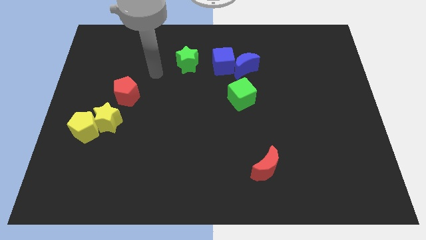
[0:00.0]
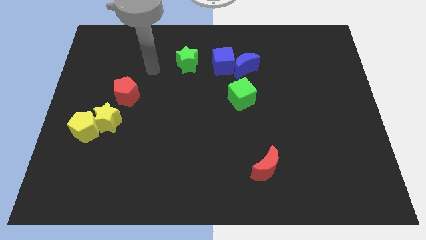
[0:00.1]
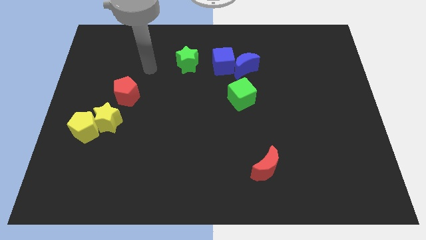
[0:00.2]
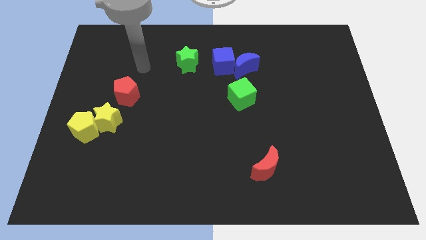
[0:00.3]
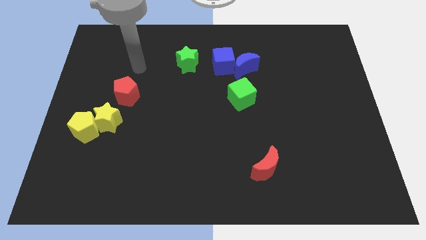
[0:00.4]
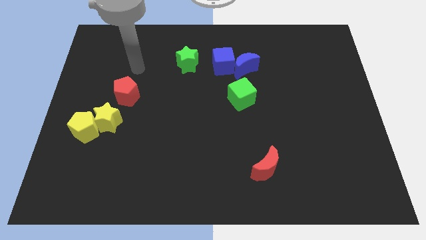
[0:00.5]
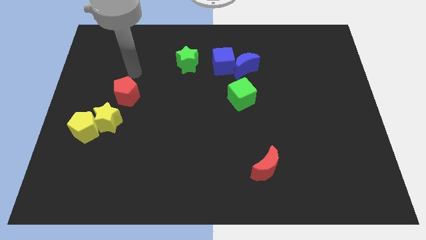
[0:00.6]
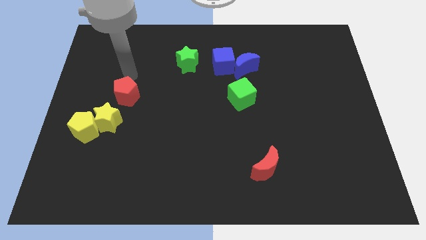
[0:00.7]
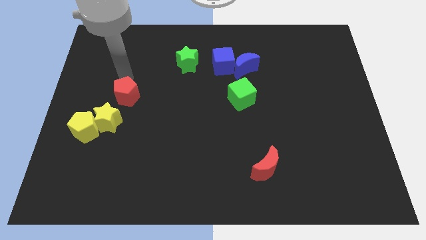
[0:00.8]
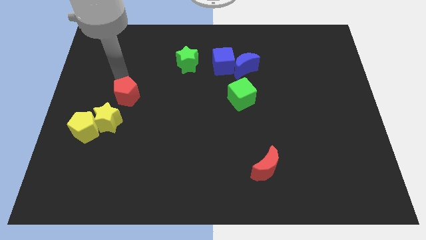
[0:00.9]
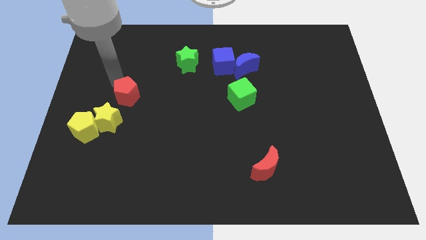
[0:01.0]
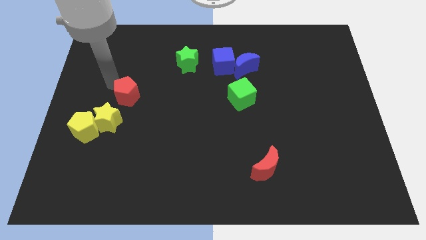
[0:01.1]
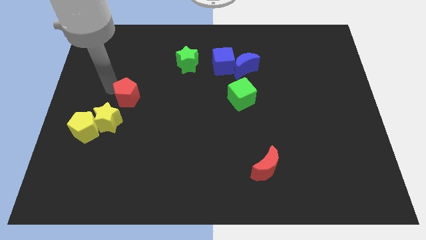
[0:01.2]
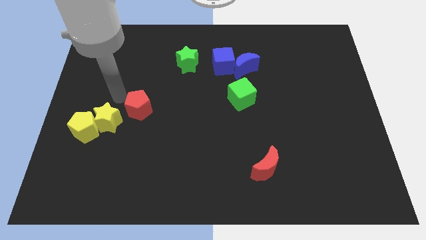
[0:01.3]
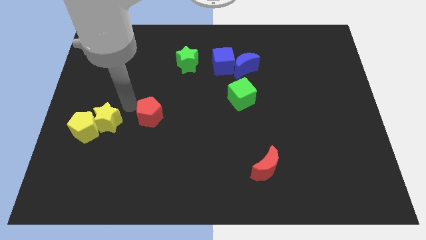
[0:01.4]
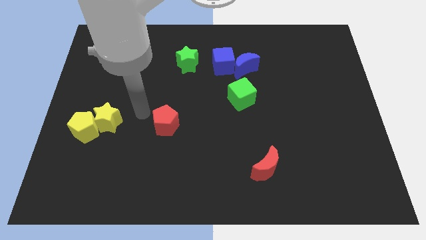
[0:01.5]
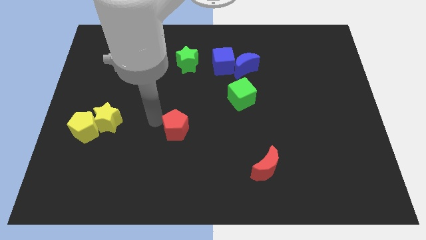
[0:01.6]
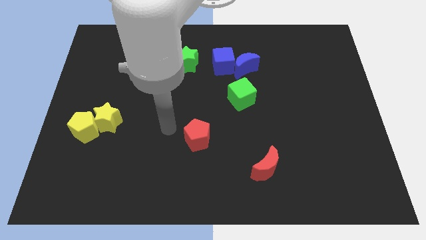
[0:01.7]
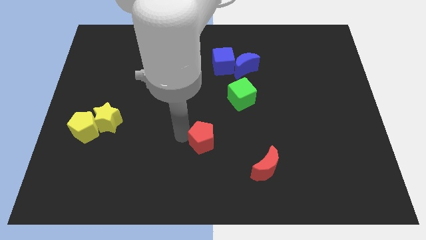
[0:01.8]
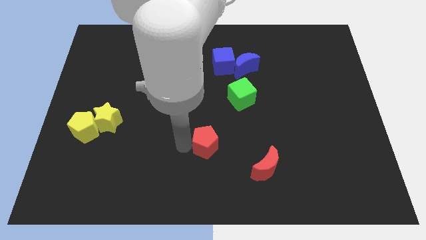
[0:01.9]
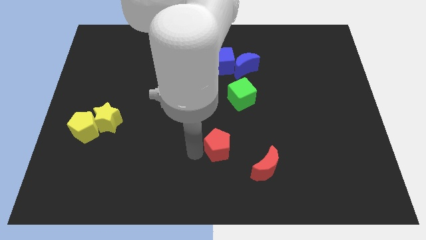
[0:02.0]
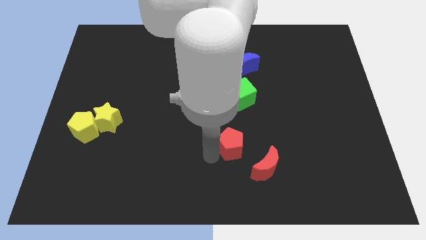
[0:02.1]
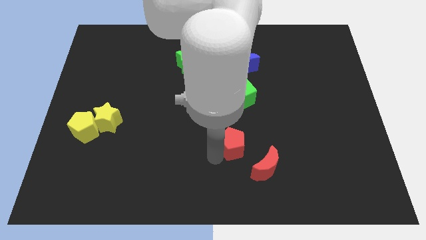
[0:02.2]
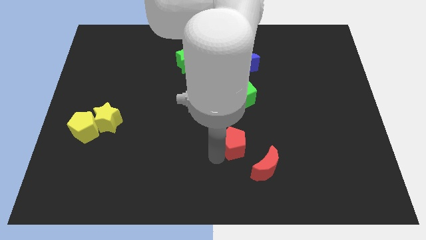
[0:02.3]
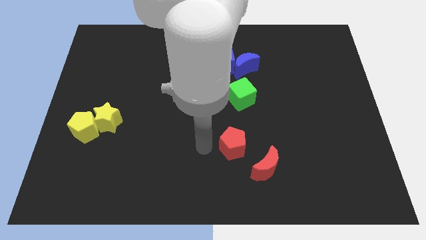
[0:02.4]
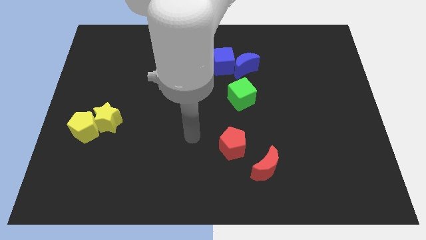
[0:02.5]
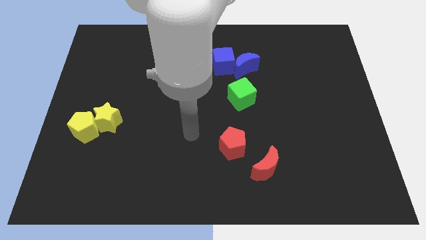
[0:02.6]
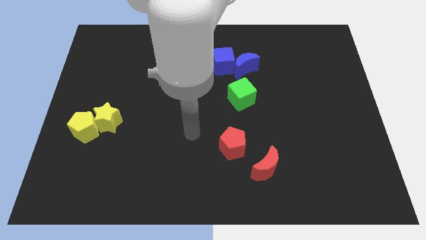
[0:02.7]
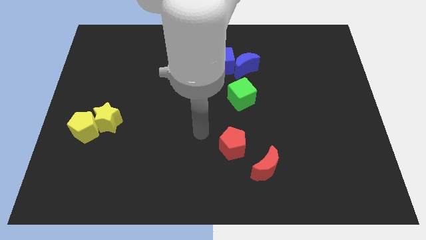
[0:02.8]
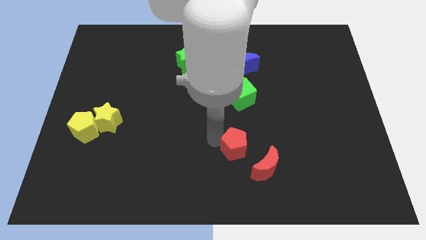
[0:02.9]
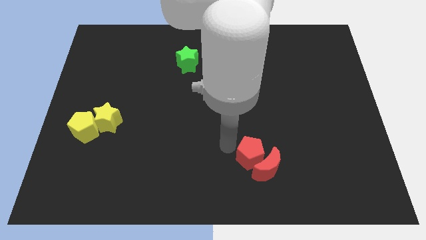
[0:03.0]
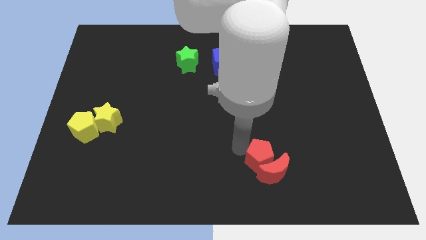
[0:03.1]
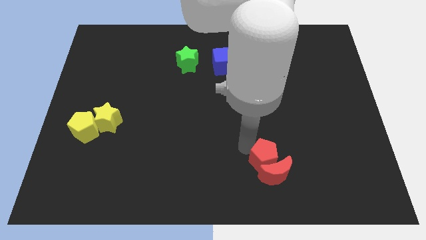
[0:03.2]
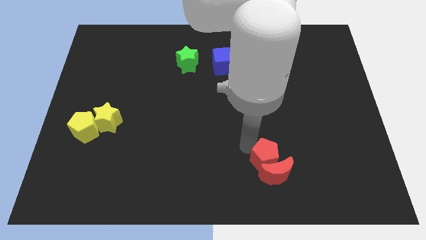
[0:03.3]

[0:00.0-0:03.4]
push the red pentagon into the red moon

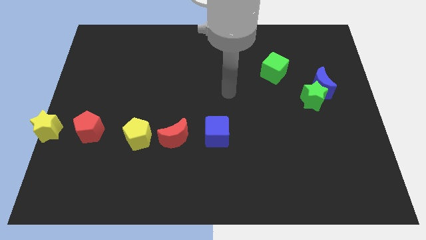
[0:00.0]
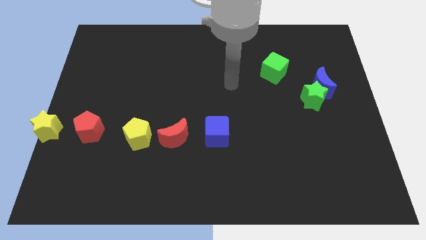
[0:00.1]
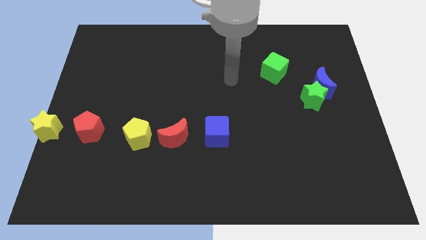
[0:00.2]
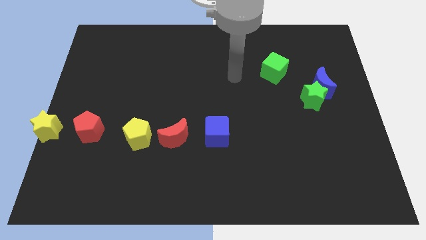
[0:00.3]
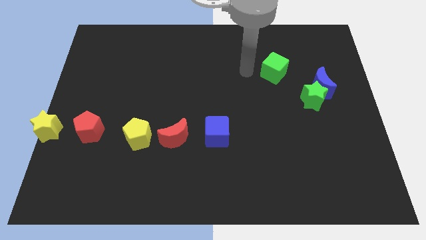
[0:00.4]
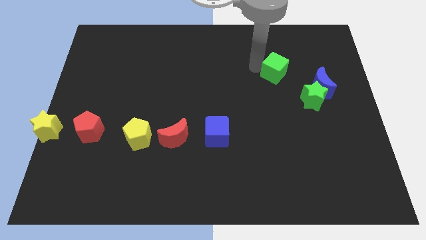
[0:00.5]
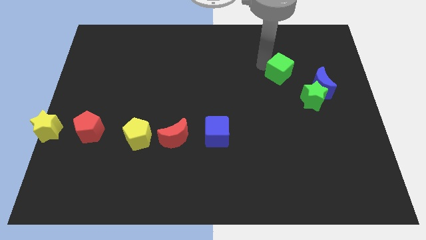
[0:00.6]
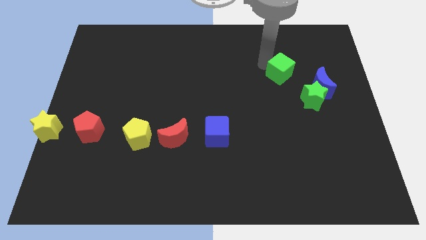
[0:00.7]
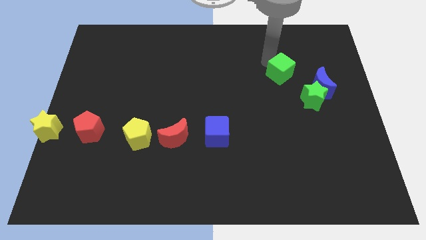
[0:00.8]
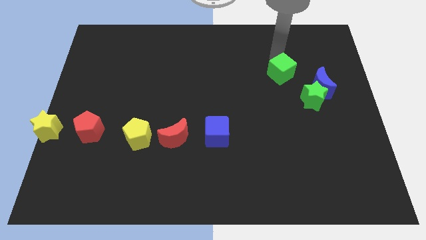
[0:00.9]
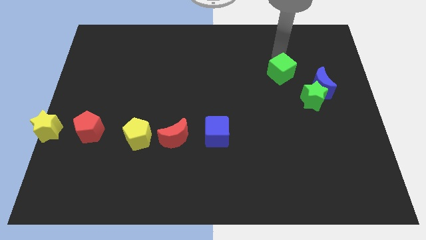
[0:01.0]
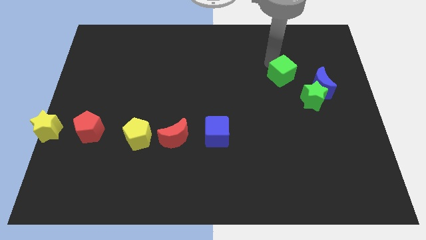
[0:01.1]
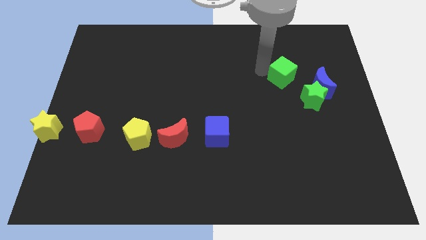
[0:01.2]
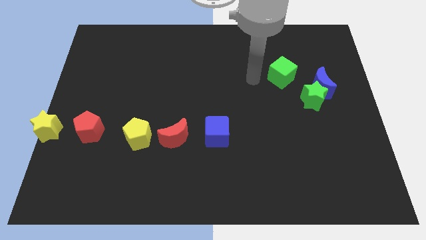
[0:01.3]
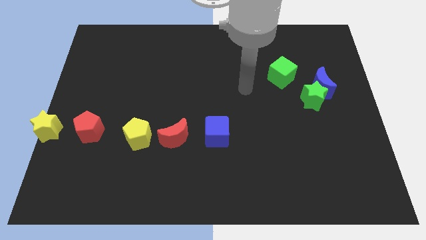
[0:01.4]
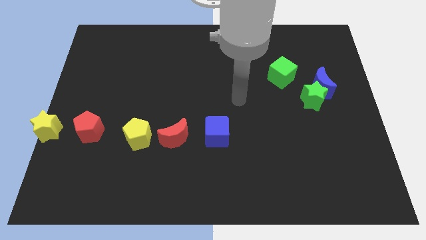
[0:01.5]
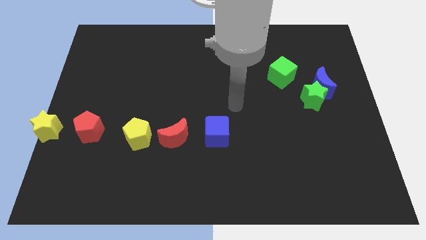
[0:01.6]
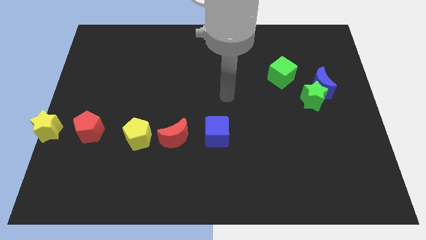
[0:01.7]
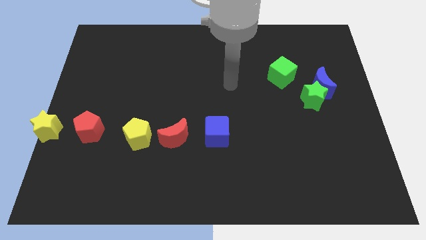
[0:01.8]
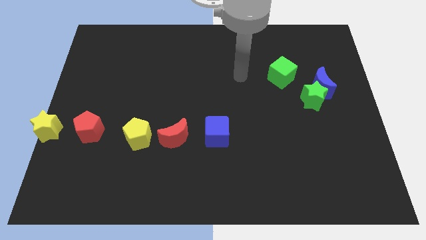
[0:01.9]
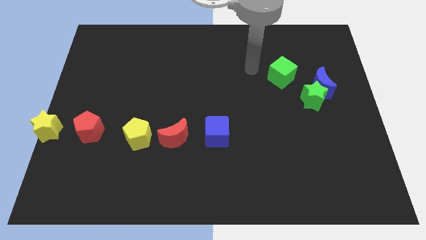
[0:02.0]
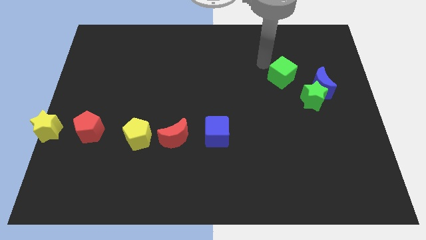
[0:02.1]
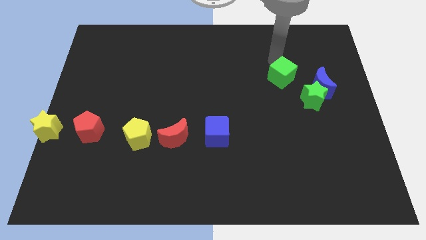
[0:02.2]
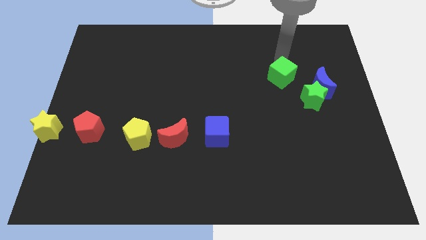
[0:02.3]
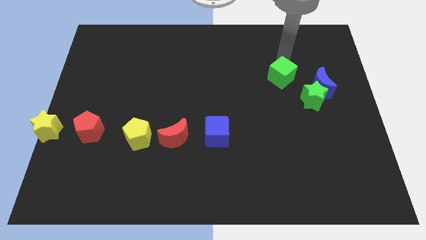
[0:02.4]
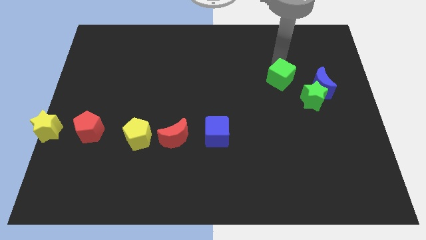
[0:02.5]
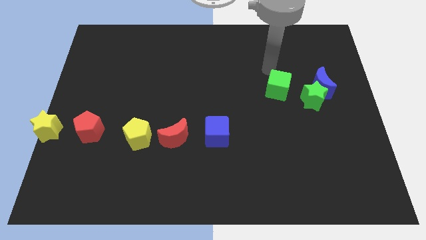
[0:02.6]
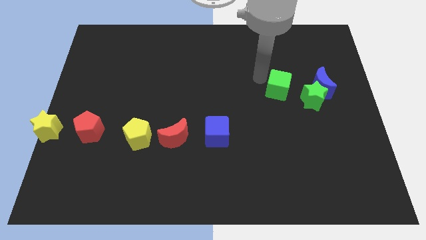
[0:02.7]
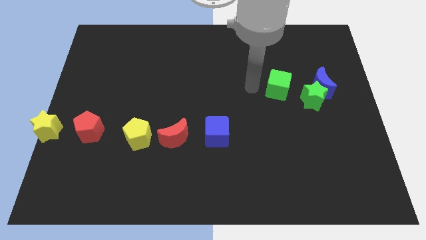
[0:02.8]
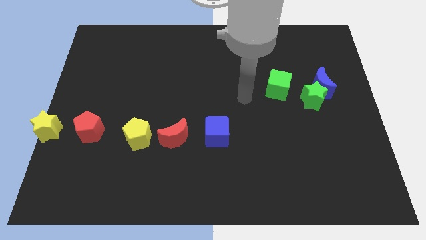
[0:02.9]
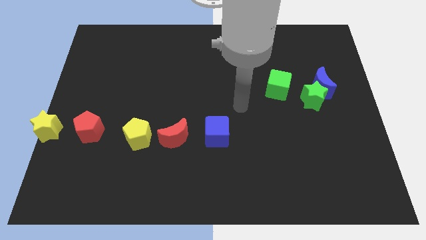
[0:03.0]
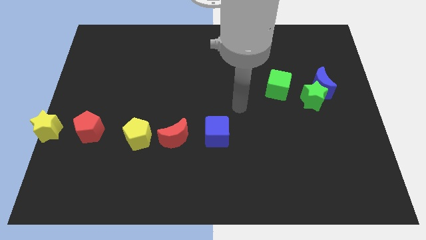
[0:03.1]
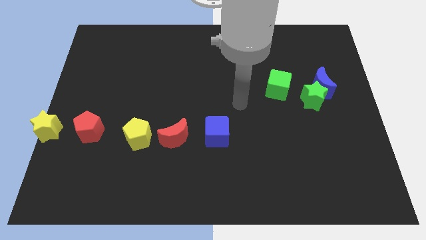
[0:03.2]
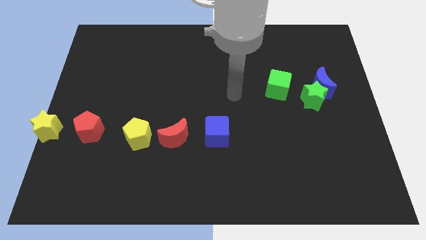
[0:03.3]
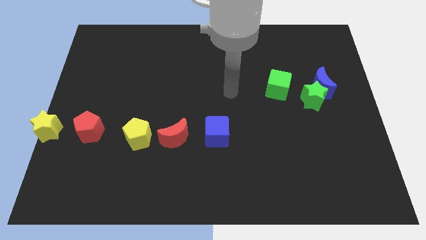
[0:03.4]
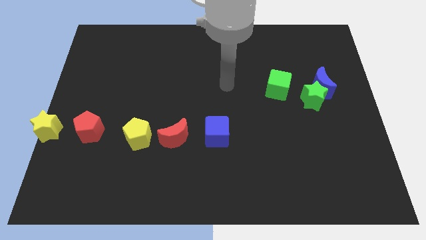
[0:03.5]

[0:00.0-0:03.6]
slide the green cube slightly towards down

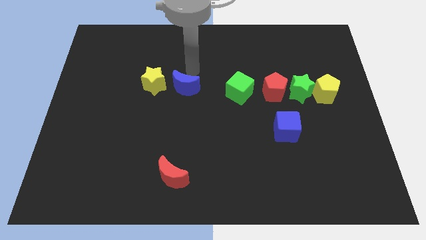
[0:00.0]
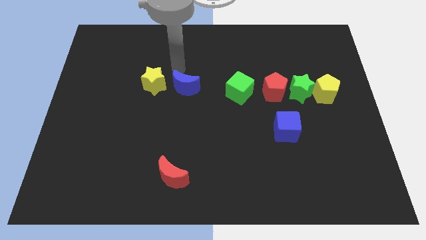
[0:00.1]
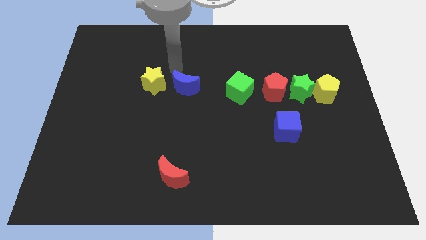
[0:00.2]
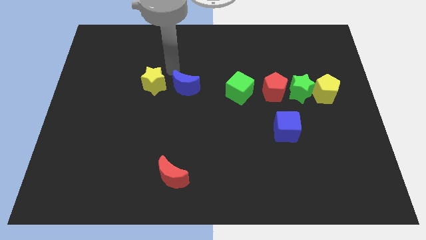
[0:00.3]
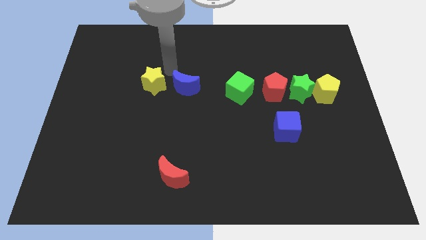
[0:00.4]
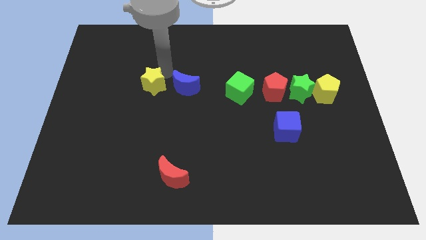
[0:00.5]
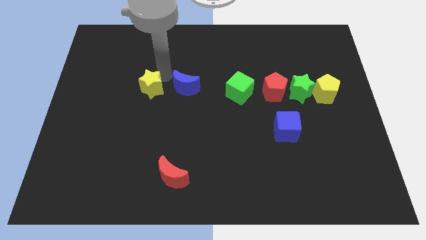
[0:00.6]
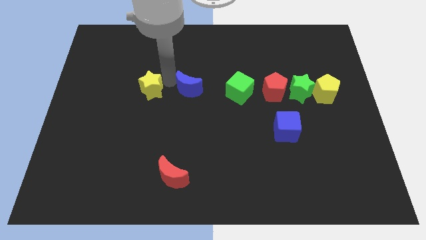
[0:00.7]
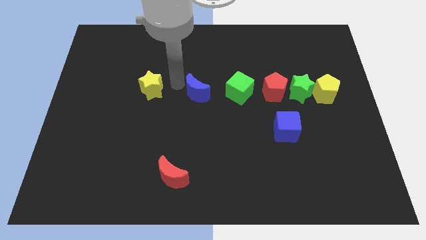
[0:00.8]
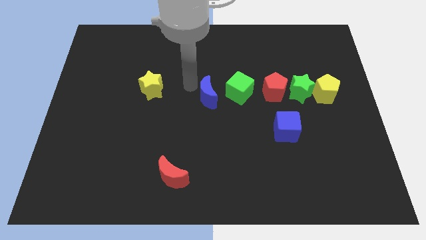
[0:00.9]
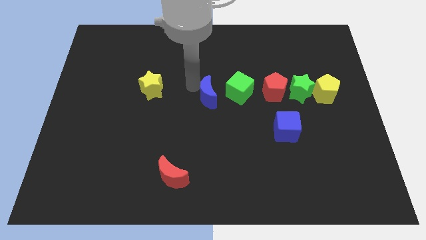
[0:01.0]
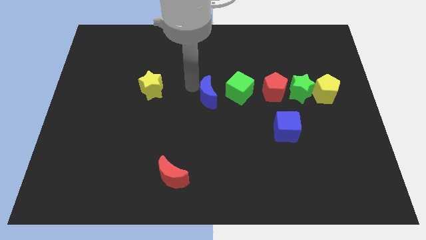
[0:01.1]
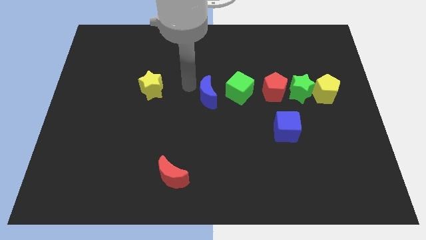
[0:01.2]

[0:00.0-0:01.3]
move blue moon towards green cube

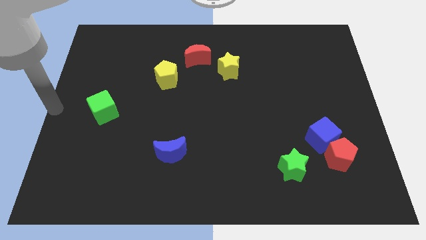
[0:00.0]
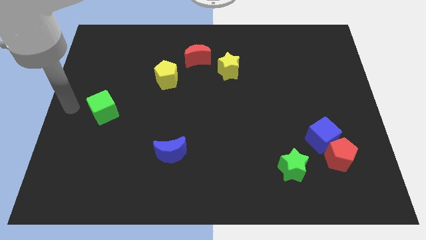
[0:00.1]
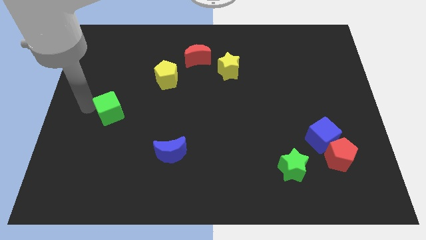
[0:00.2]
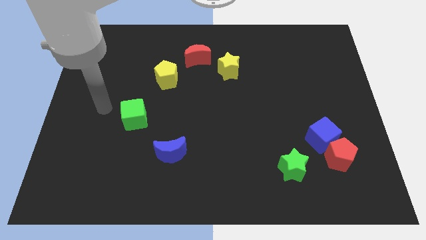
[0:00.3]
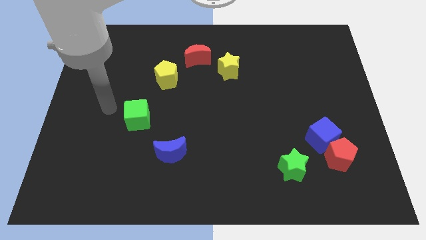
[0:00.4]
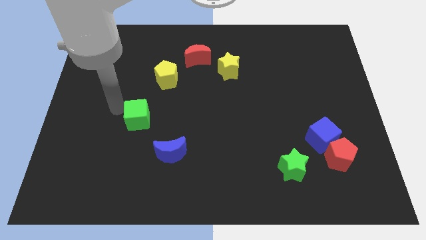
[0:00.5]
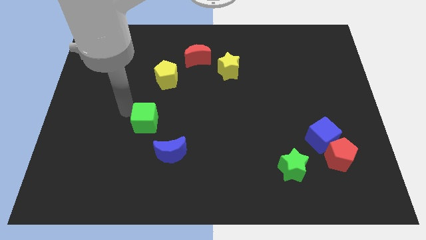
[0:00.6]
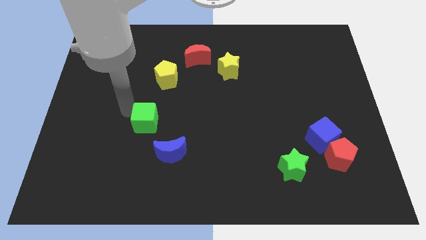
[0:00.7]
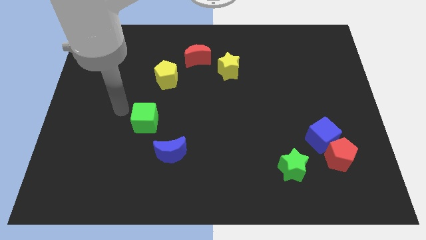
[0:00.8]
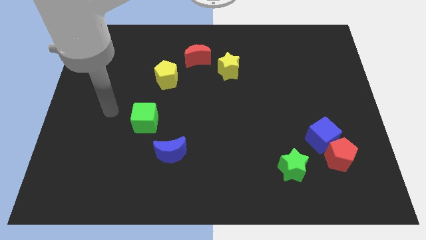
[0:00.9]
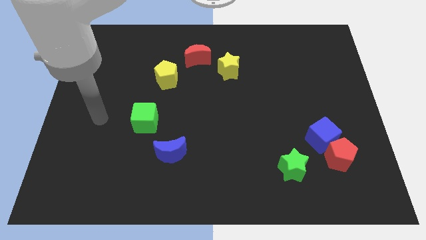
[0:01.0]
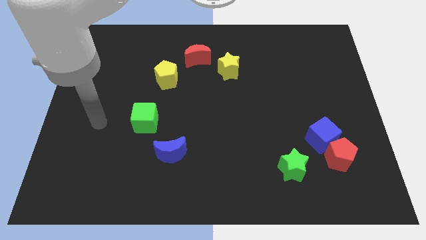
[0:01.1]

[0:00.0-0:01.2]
push the green cube to the top left of the blue crescent
